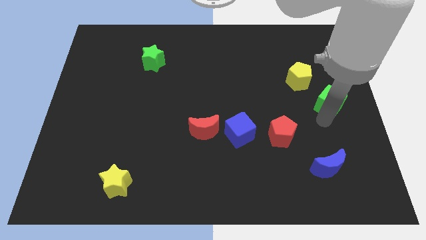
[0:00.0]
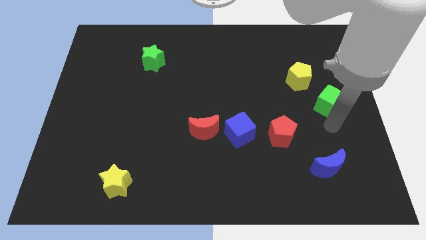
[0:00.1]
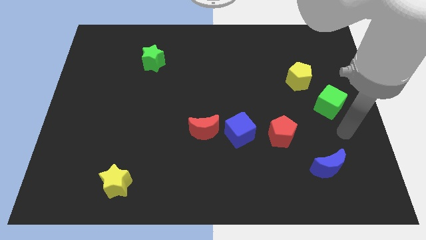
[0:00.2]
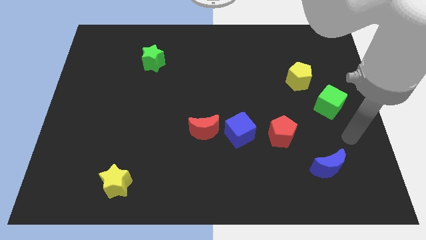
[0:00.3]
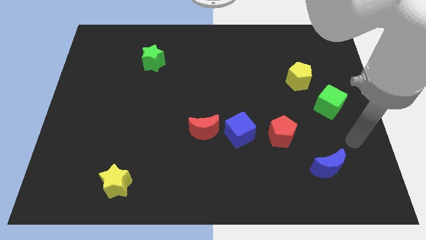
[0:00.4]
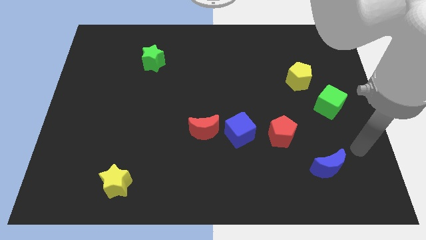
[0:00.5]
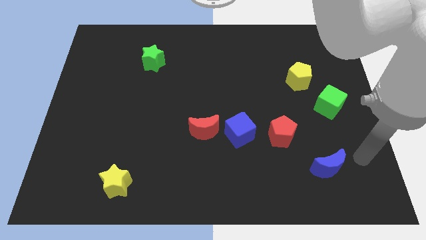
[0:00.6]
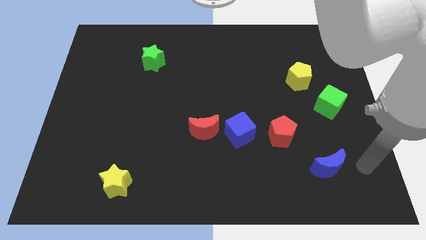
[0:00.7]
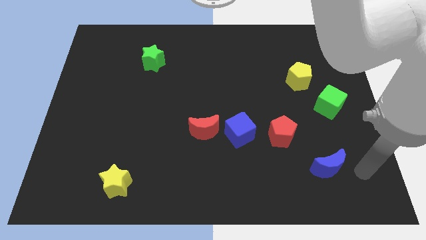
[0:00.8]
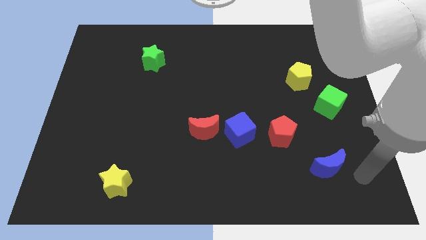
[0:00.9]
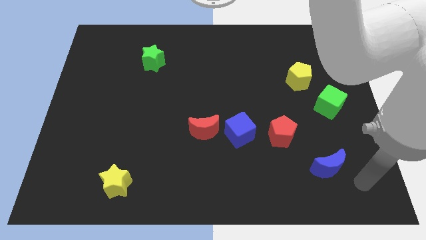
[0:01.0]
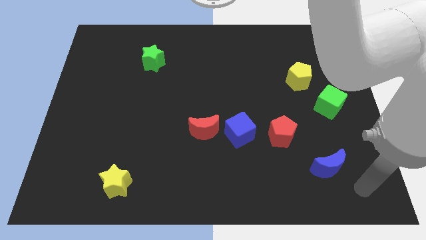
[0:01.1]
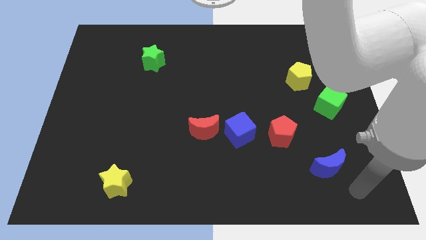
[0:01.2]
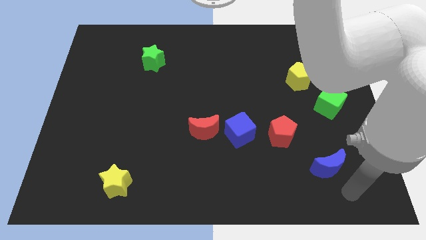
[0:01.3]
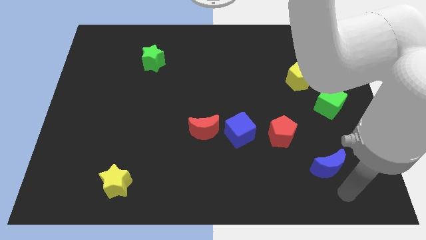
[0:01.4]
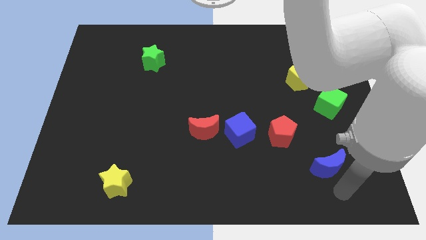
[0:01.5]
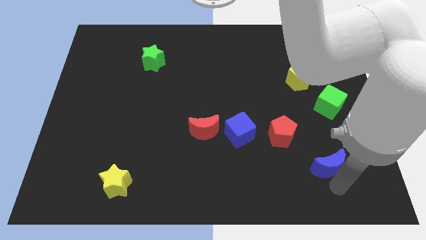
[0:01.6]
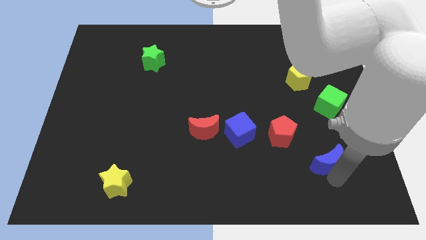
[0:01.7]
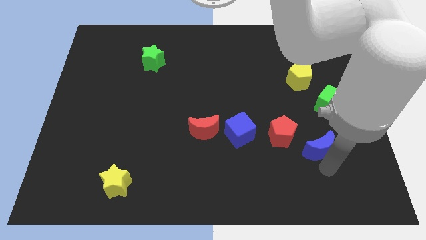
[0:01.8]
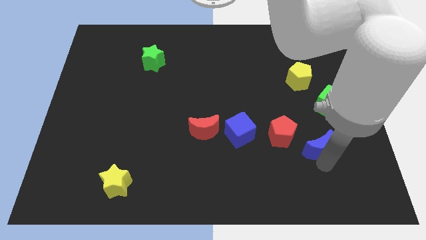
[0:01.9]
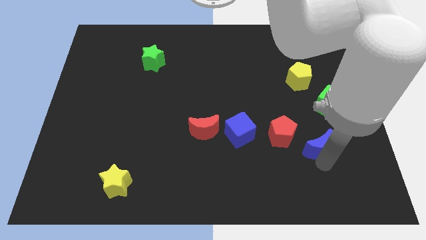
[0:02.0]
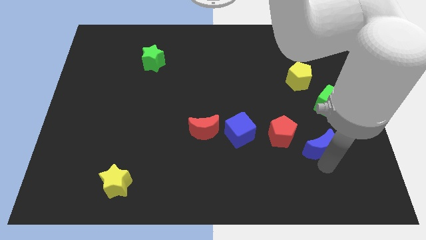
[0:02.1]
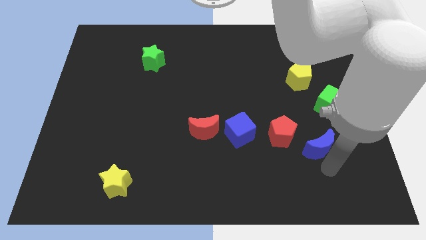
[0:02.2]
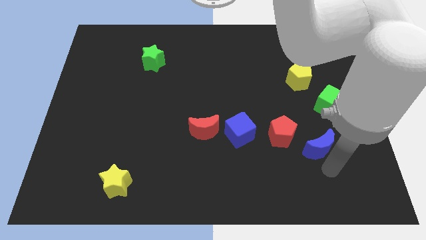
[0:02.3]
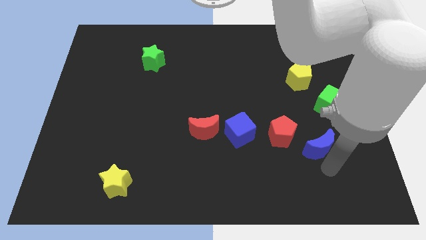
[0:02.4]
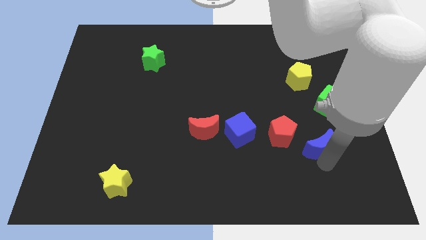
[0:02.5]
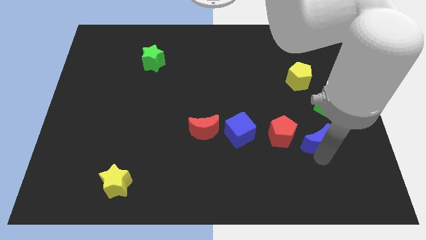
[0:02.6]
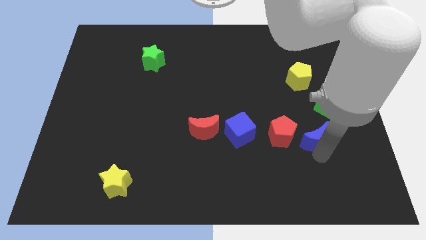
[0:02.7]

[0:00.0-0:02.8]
place blue moon to the right of red pentagon

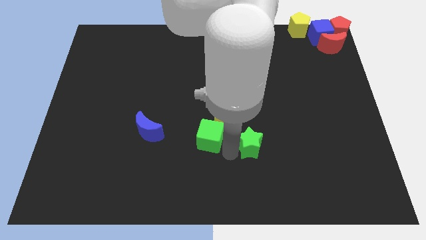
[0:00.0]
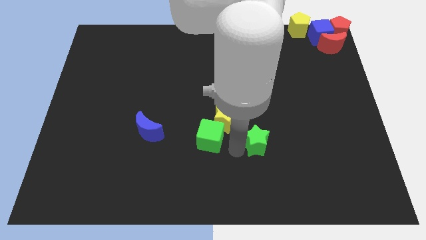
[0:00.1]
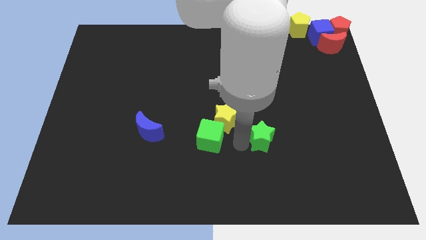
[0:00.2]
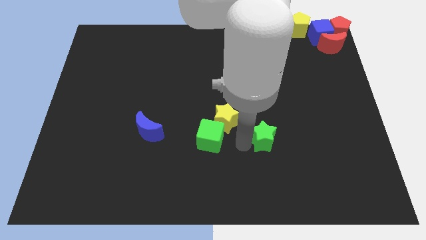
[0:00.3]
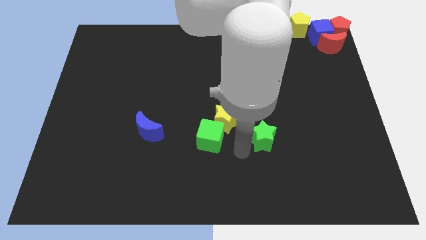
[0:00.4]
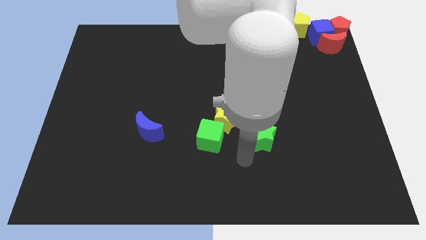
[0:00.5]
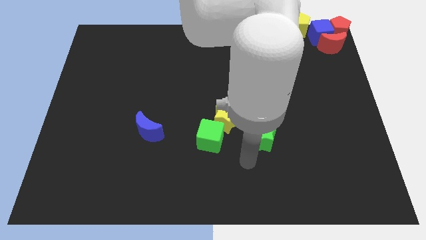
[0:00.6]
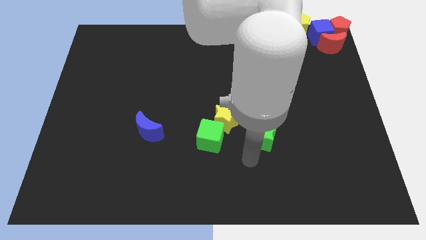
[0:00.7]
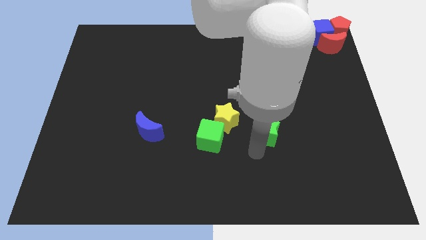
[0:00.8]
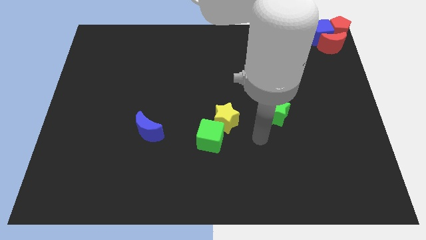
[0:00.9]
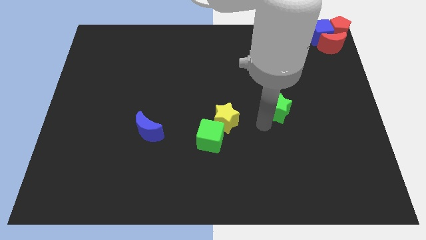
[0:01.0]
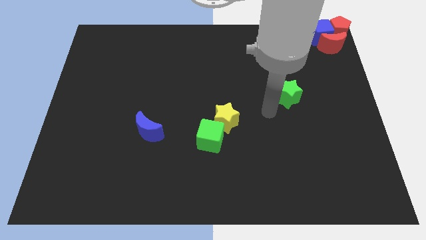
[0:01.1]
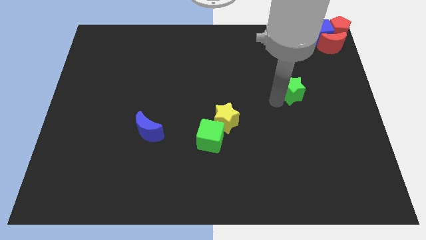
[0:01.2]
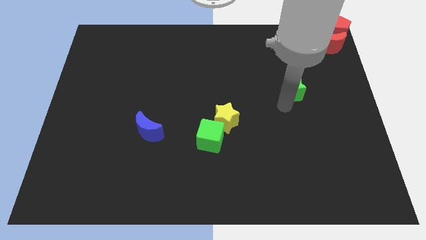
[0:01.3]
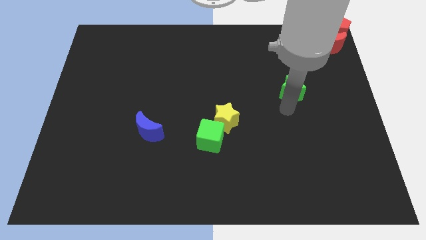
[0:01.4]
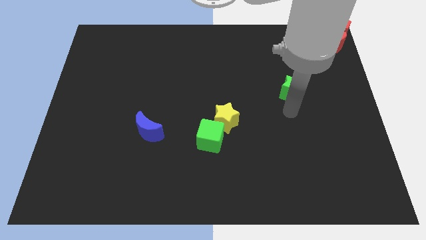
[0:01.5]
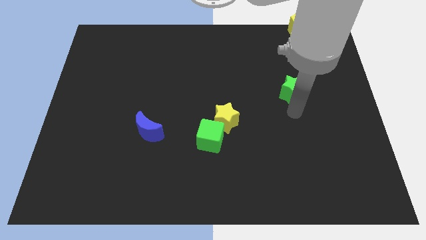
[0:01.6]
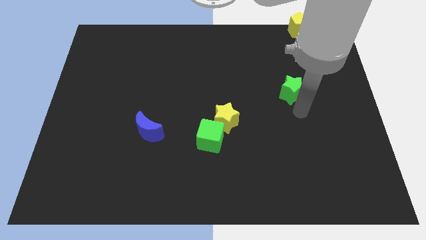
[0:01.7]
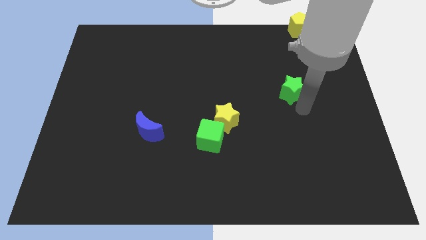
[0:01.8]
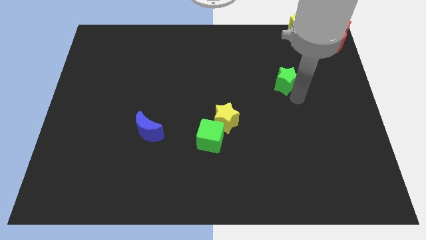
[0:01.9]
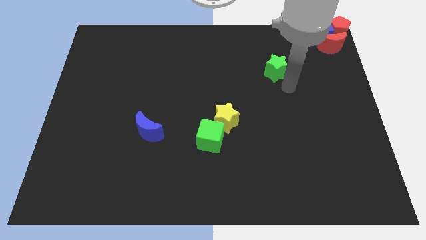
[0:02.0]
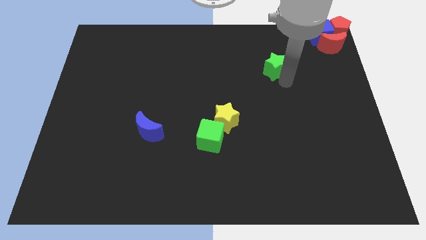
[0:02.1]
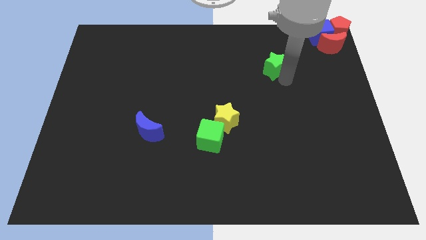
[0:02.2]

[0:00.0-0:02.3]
move the green star towards the top right of the board

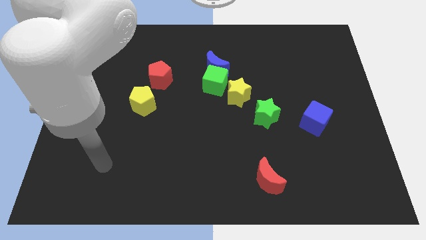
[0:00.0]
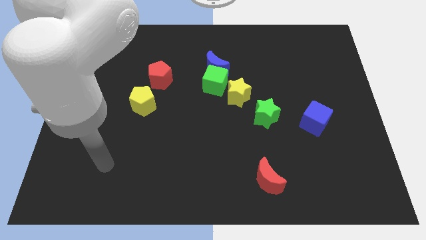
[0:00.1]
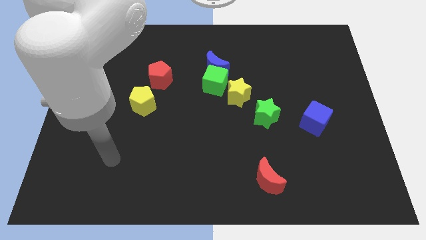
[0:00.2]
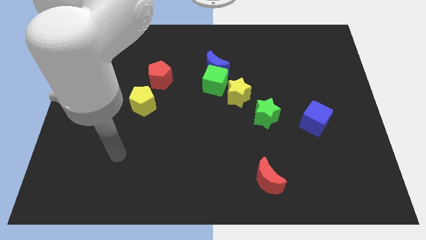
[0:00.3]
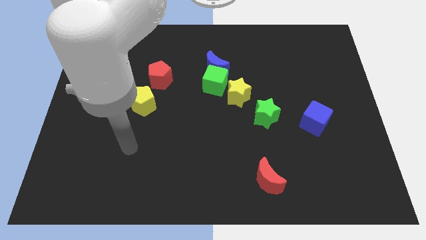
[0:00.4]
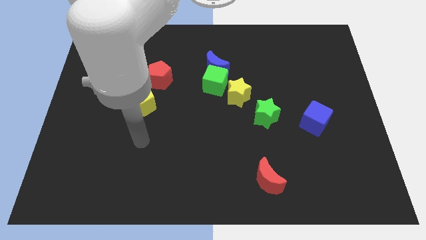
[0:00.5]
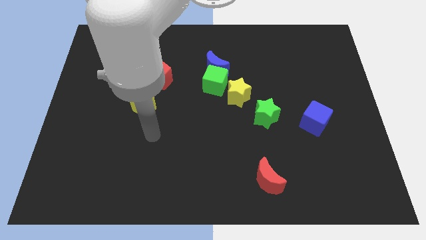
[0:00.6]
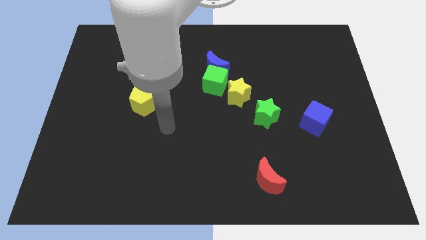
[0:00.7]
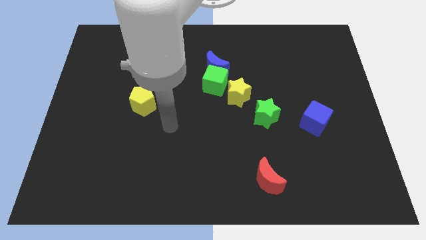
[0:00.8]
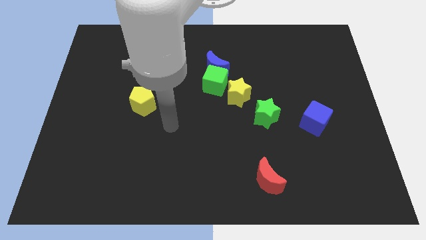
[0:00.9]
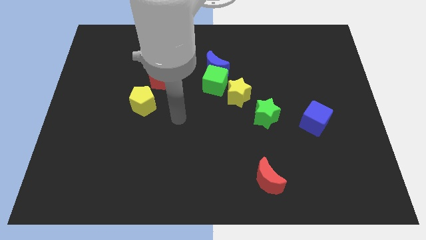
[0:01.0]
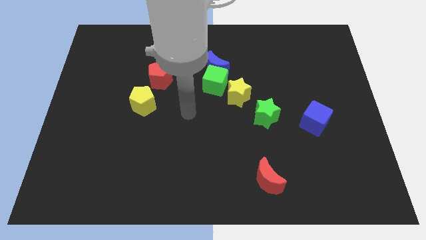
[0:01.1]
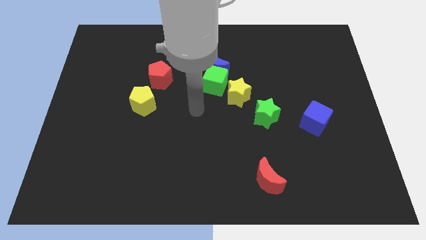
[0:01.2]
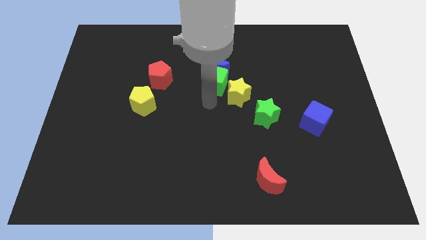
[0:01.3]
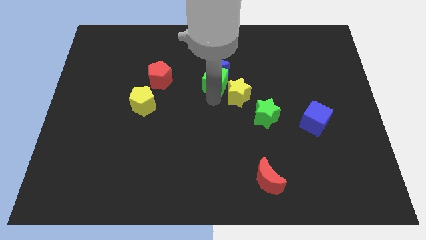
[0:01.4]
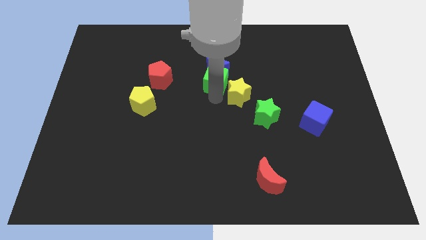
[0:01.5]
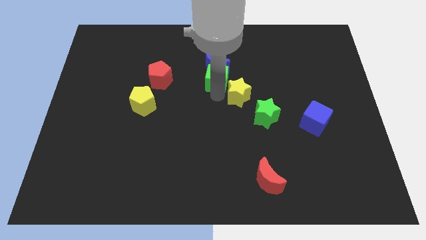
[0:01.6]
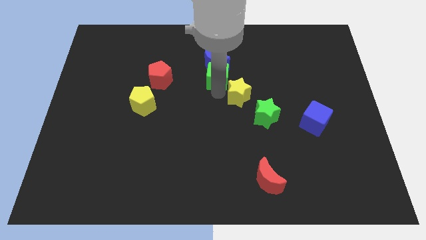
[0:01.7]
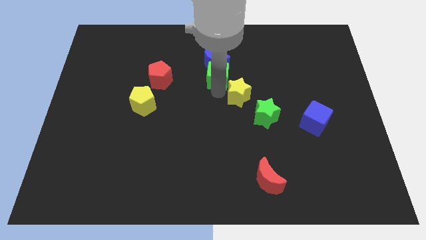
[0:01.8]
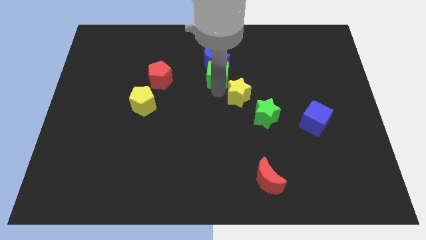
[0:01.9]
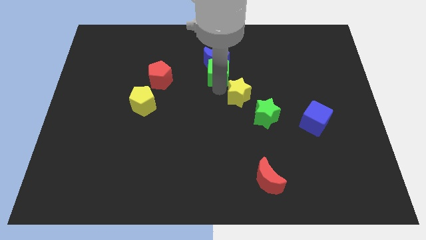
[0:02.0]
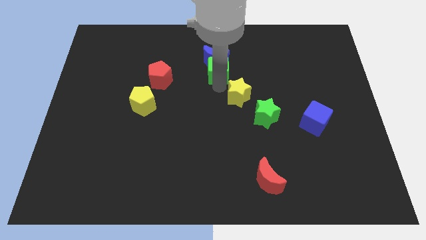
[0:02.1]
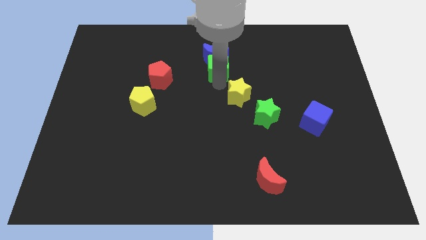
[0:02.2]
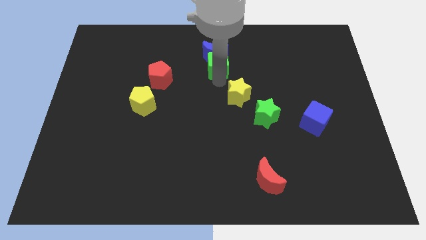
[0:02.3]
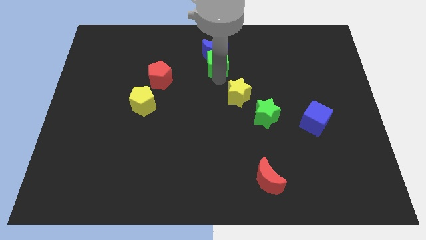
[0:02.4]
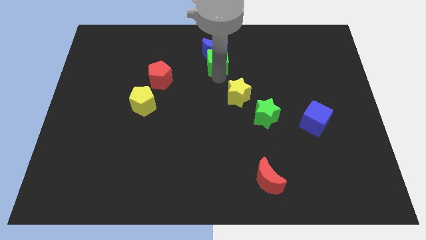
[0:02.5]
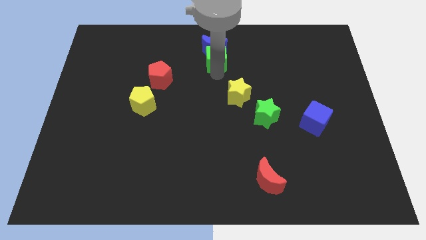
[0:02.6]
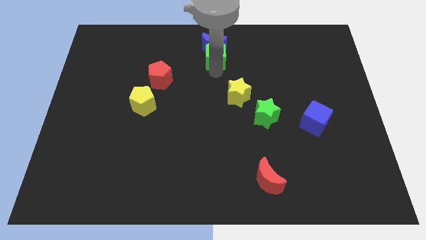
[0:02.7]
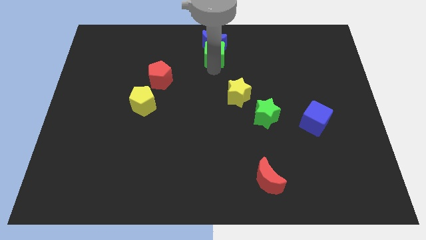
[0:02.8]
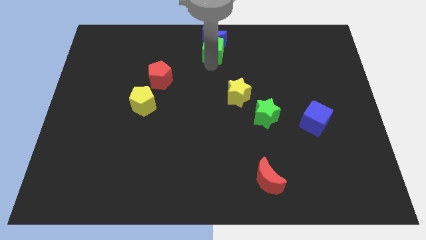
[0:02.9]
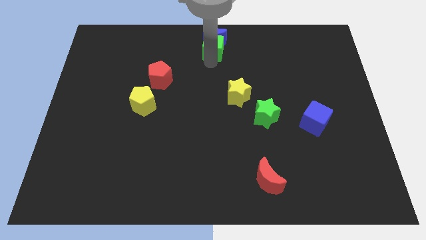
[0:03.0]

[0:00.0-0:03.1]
push green cube along with blue moon towards top center

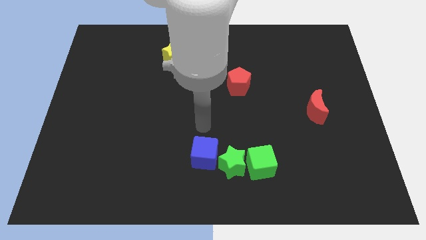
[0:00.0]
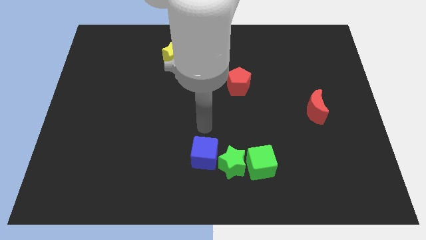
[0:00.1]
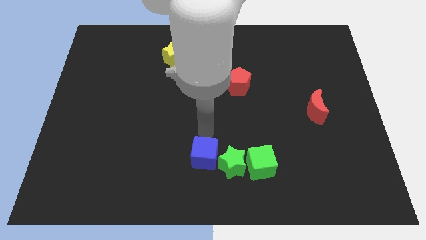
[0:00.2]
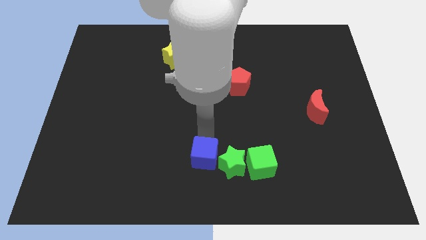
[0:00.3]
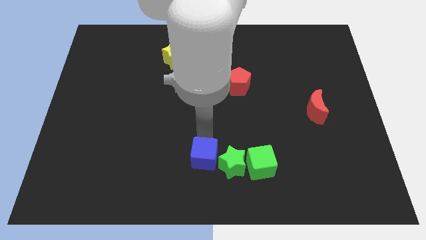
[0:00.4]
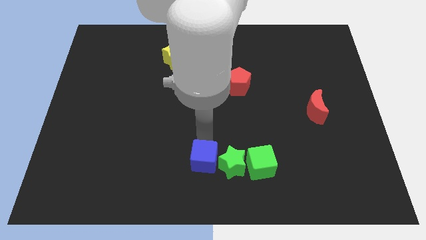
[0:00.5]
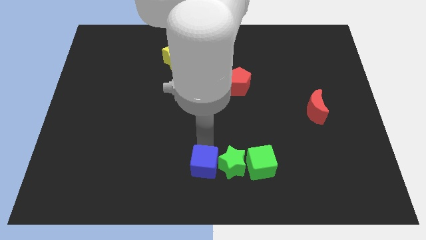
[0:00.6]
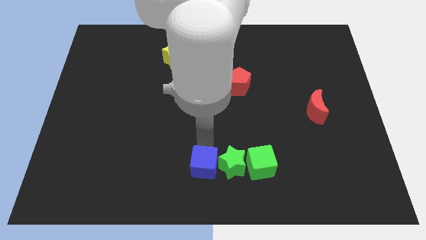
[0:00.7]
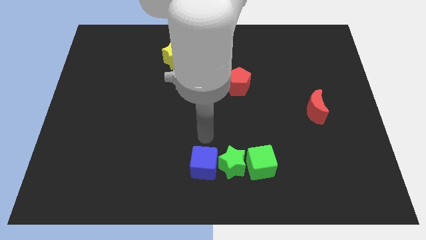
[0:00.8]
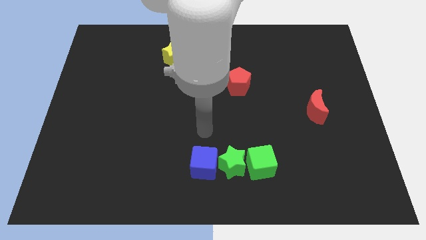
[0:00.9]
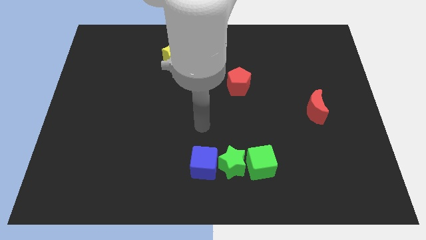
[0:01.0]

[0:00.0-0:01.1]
touch blue cube slightly on the top
